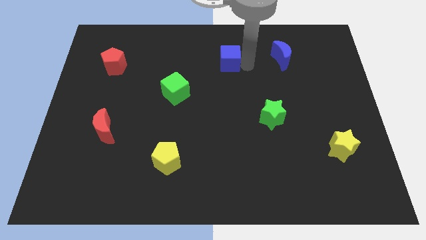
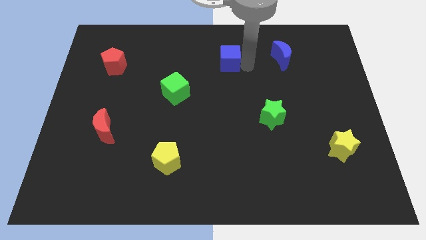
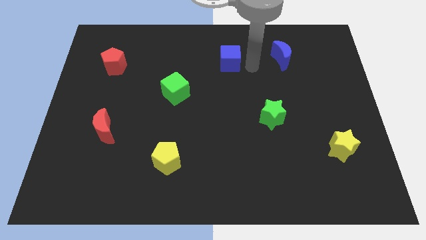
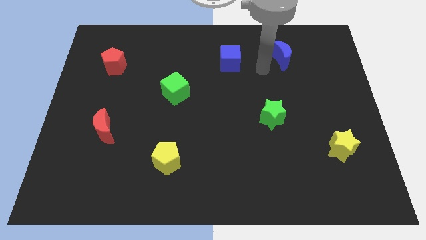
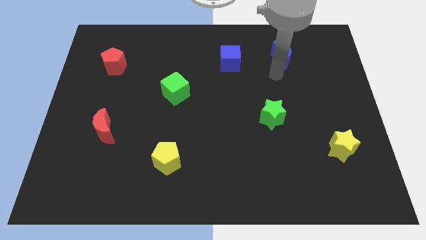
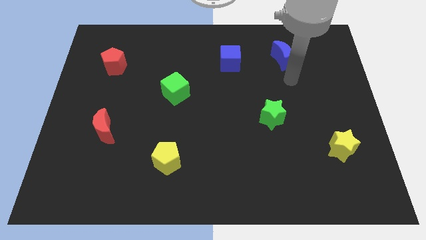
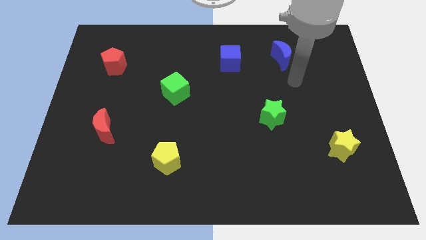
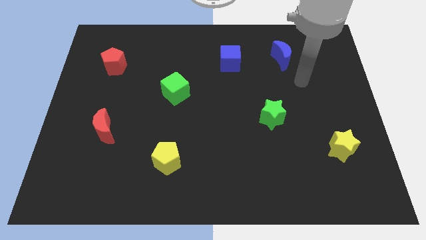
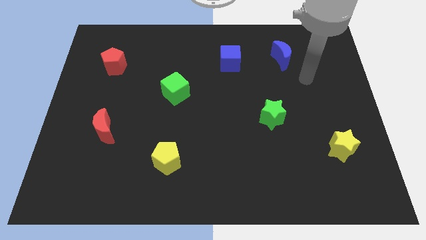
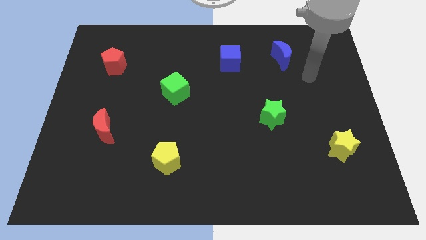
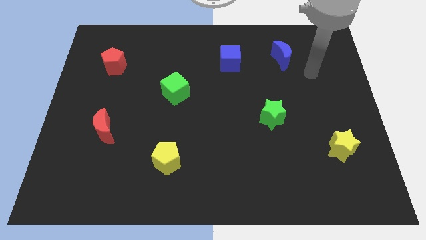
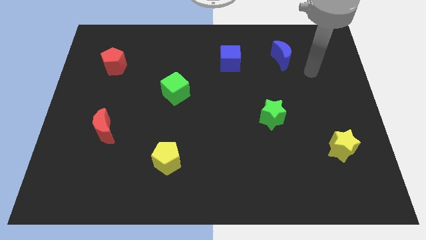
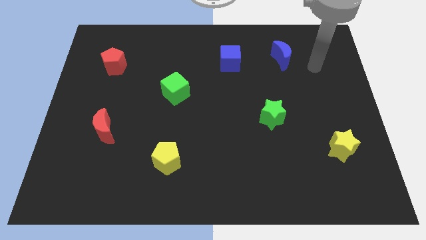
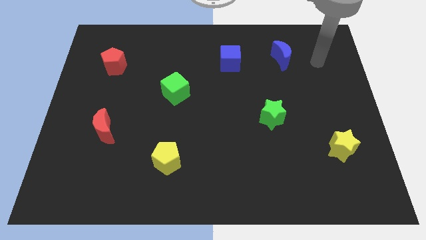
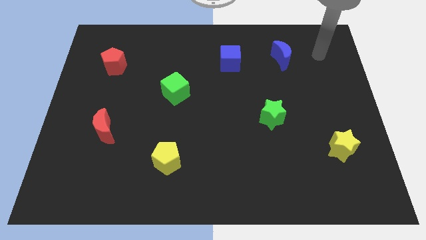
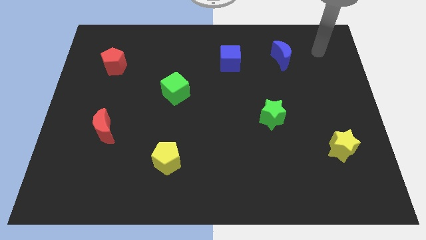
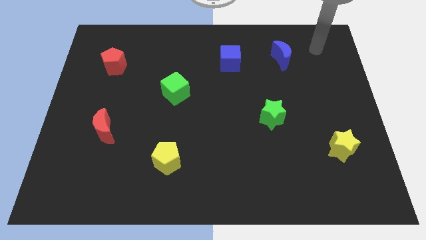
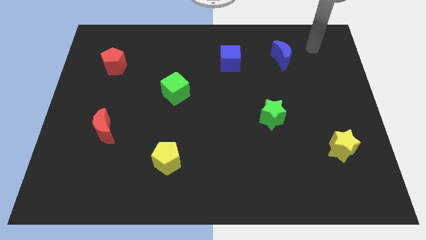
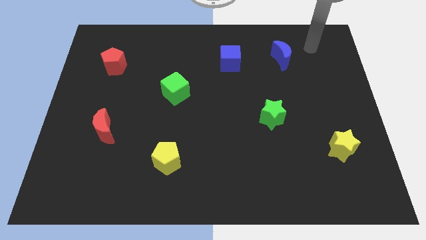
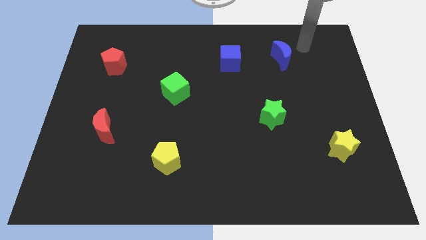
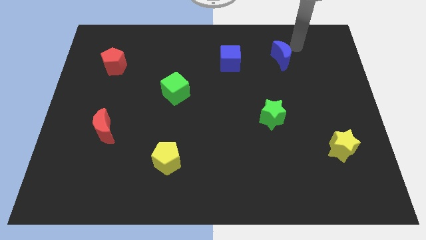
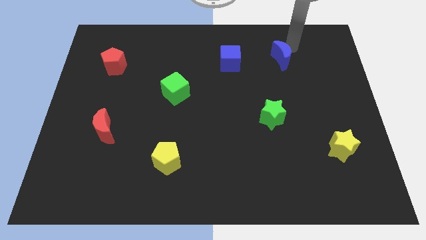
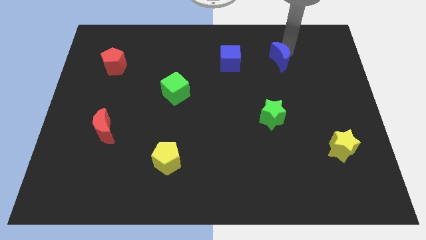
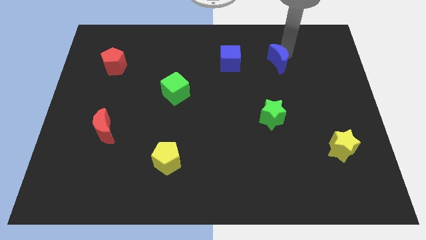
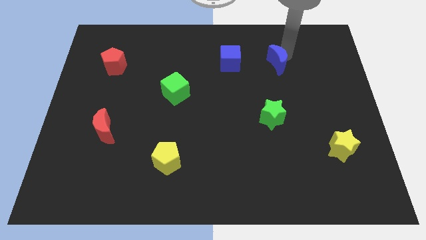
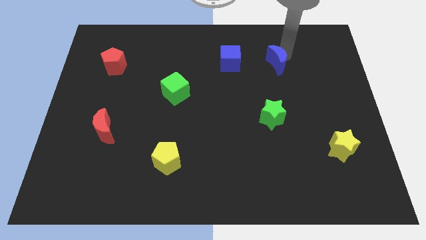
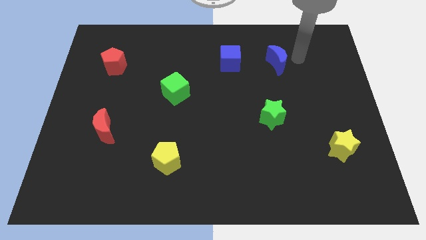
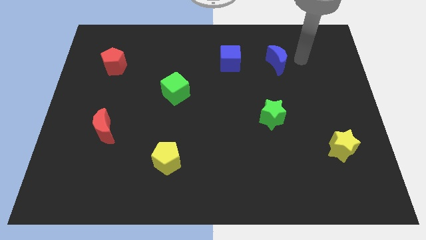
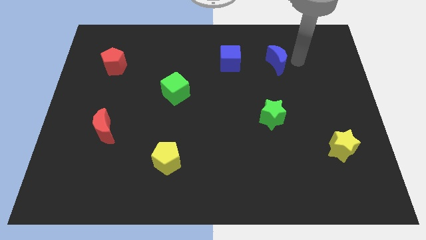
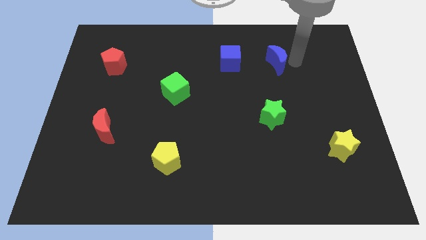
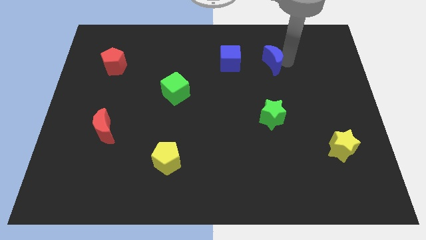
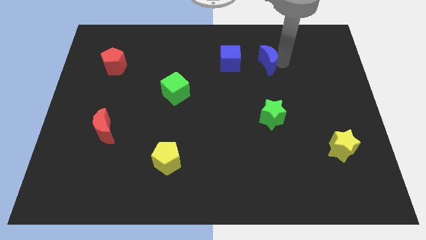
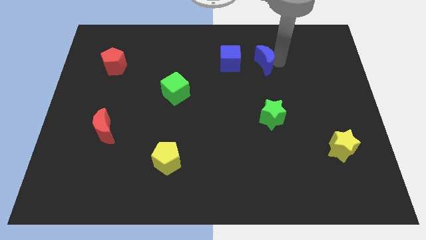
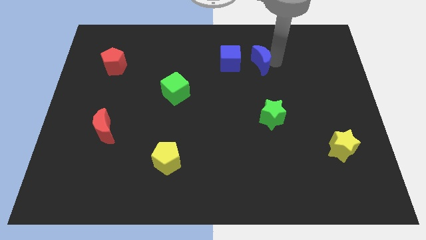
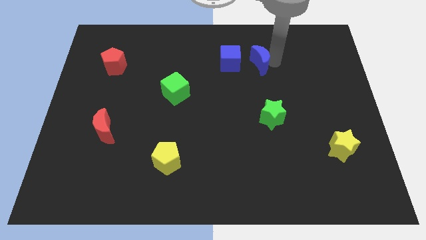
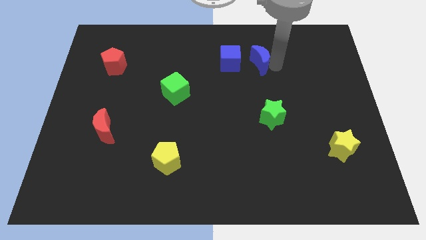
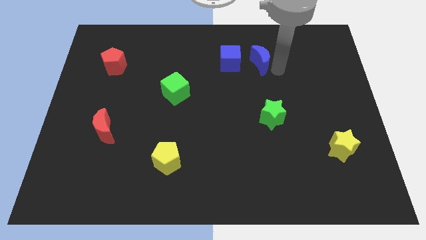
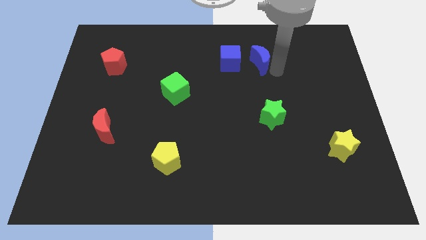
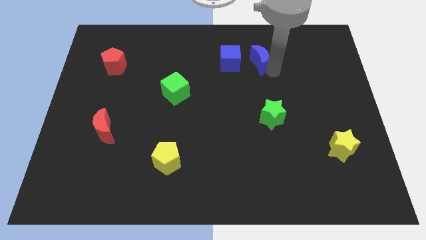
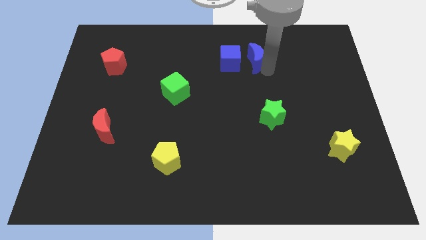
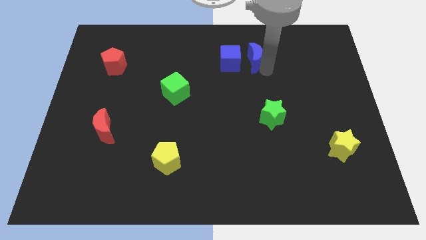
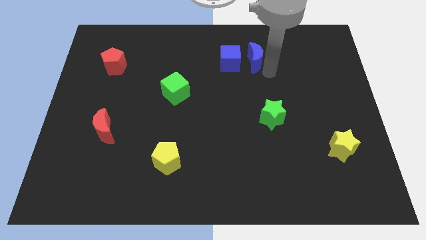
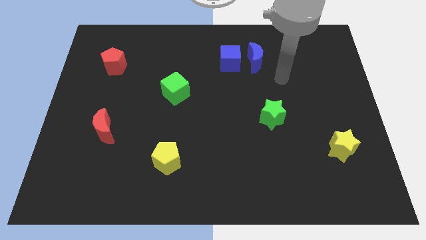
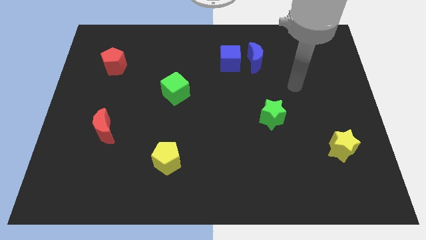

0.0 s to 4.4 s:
push the blue crescent towards the blue cube

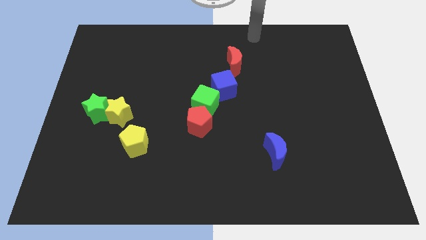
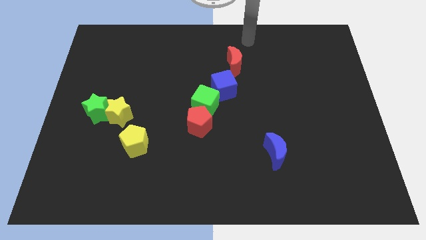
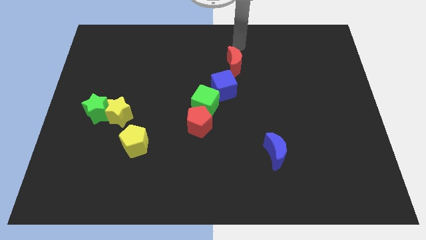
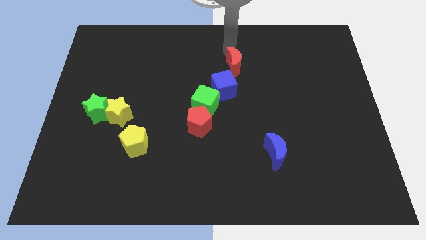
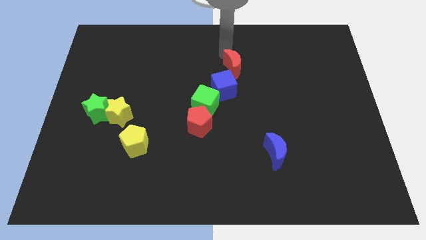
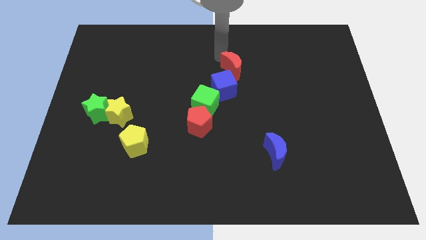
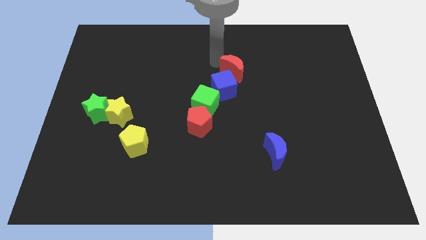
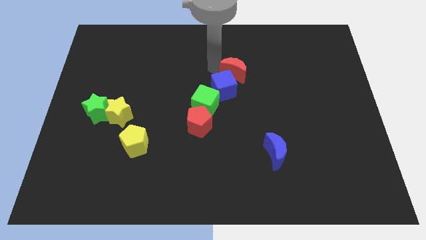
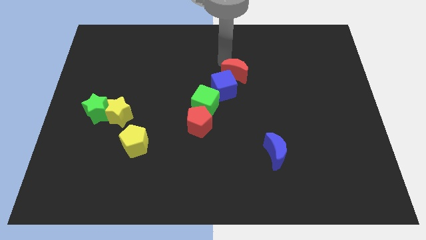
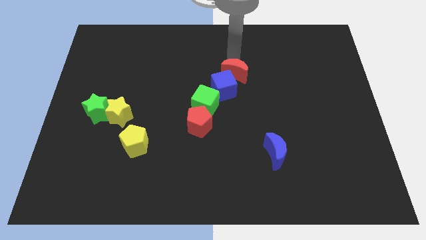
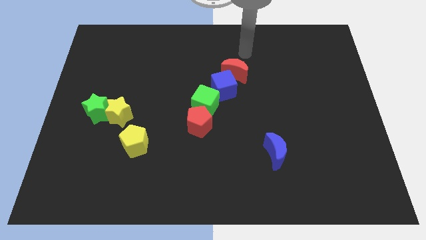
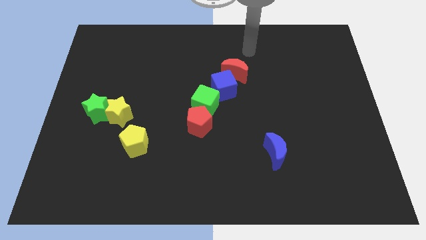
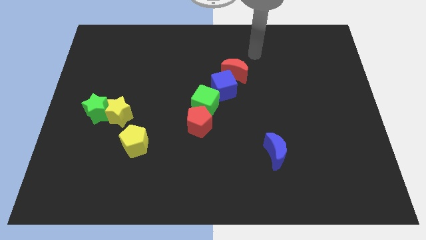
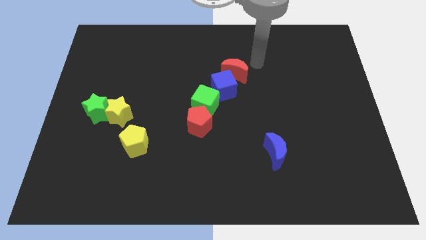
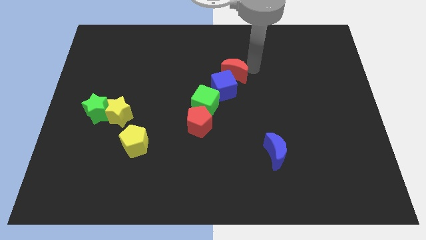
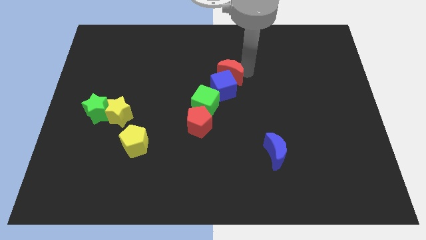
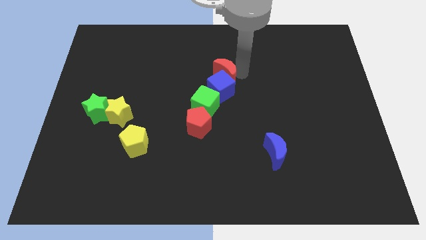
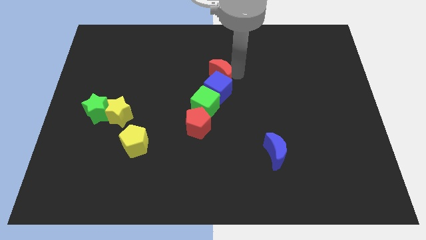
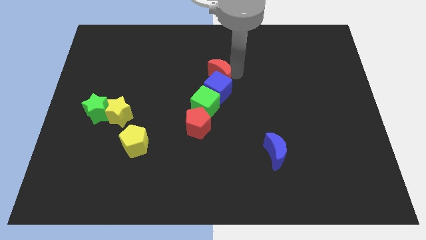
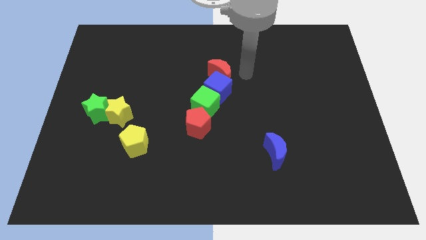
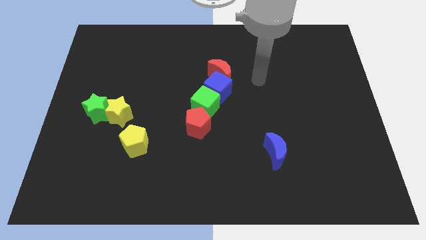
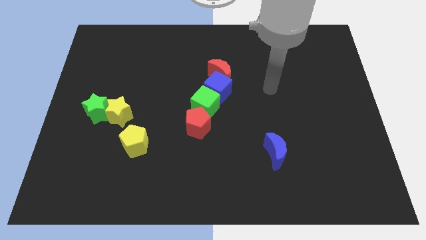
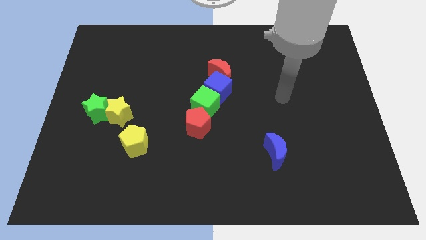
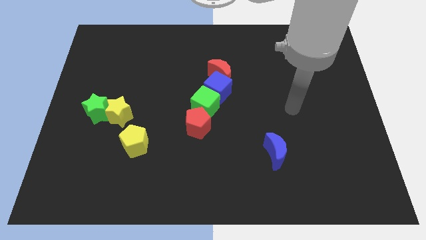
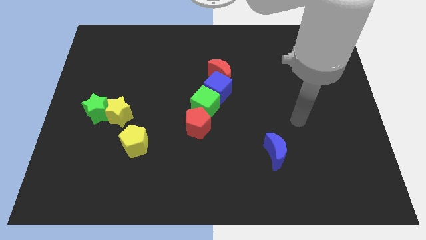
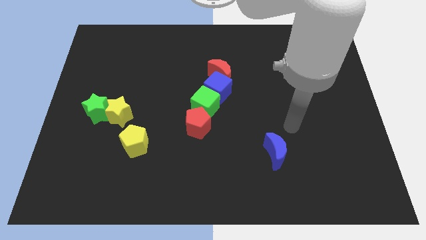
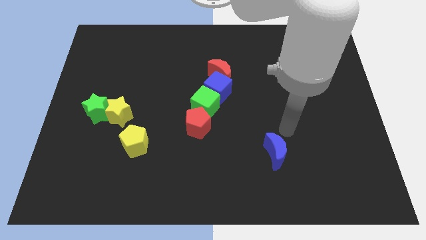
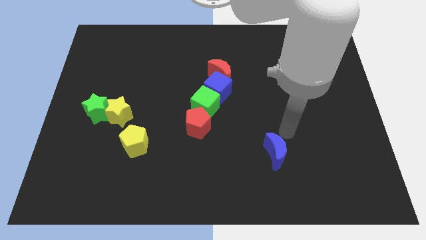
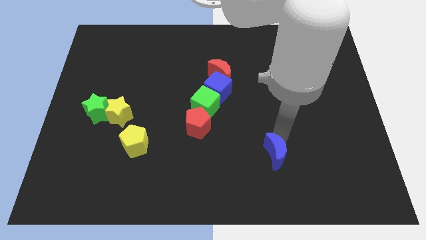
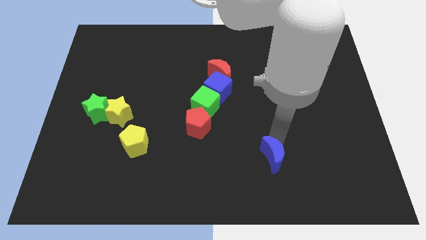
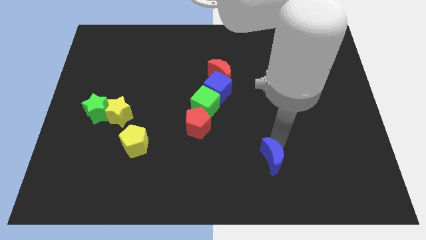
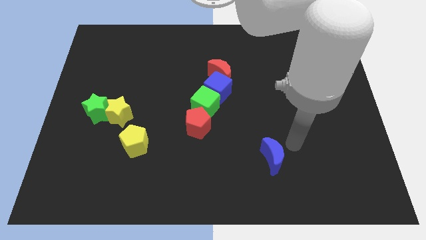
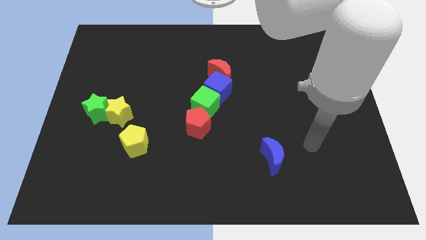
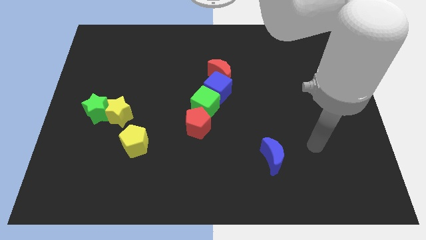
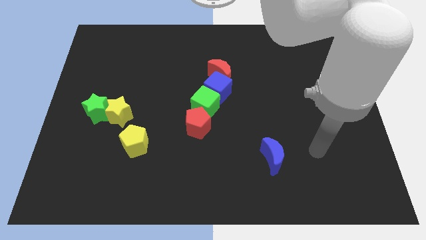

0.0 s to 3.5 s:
slightly push the blue moon to the left side

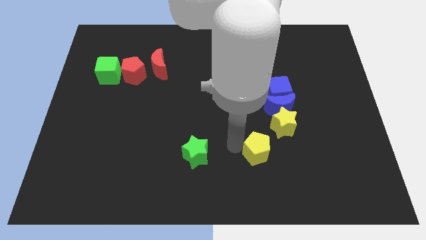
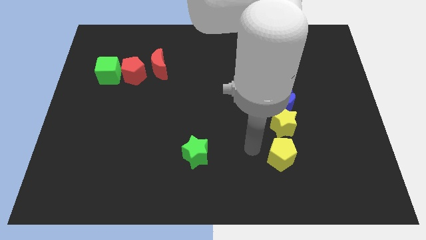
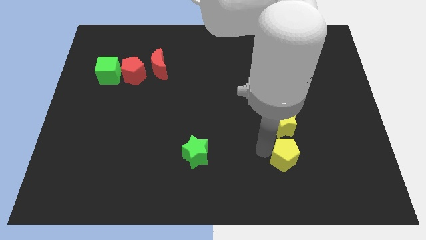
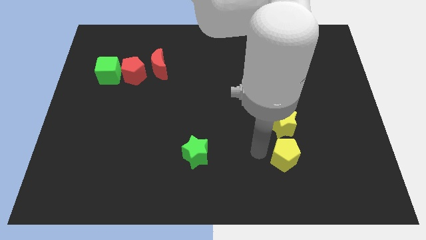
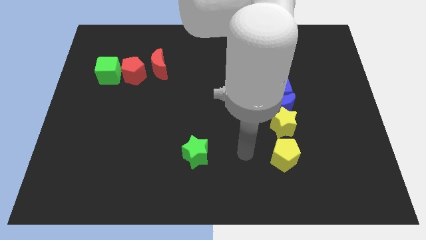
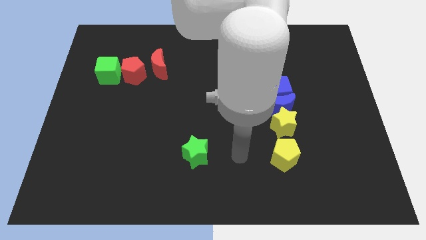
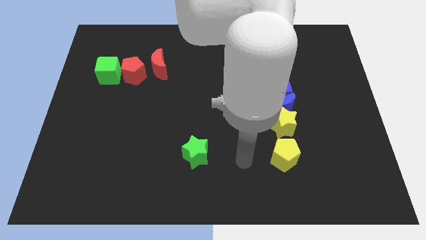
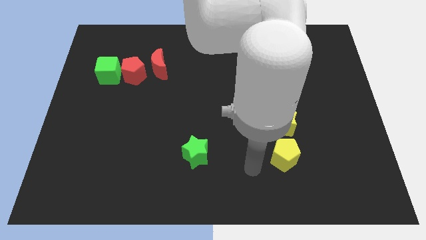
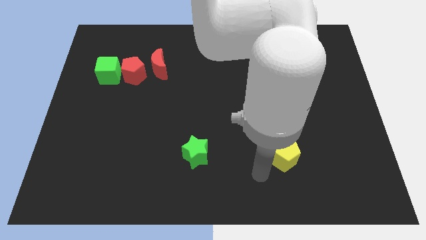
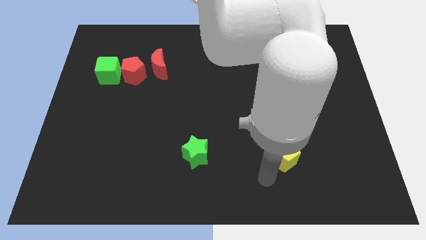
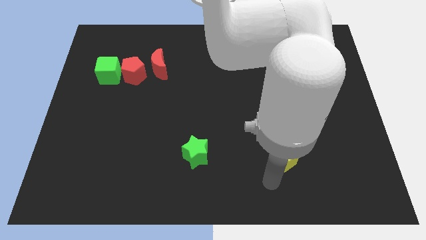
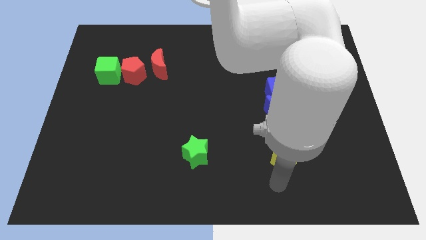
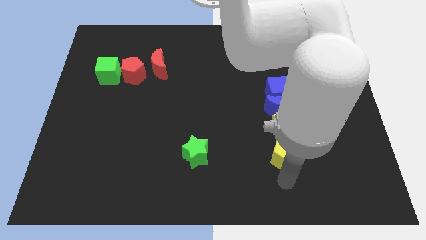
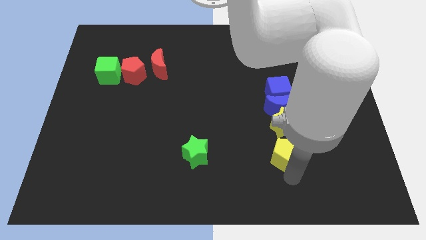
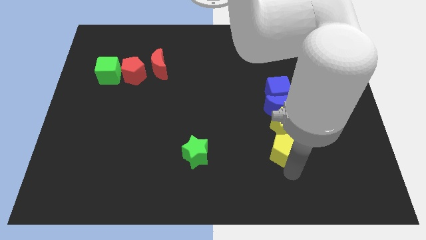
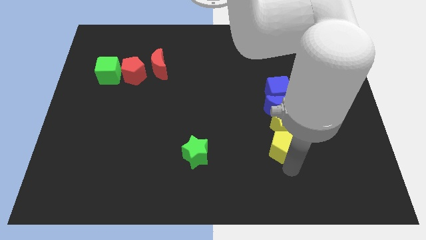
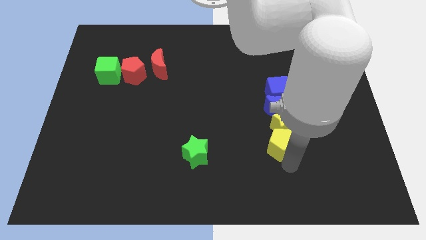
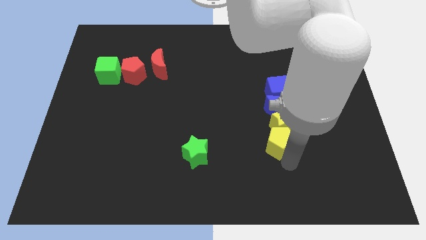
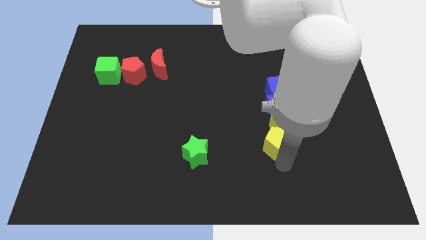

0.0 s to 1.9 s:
push the yellow pentagon into the yellow star
